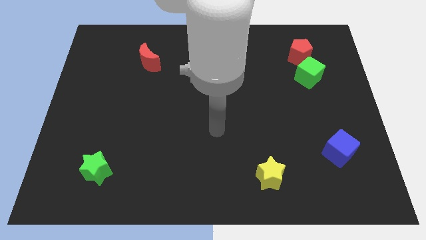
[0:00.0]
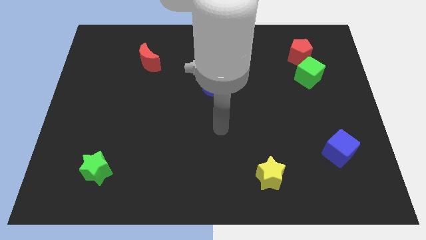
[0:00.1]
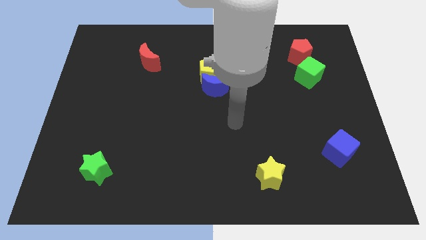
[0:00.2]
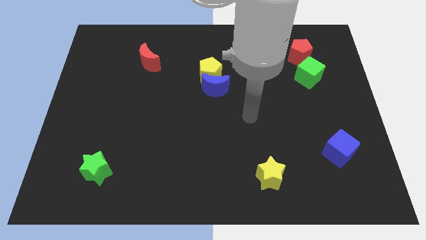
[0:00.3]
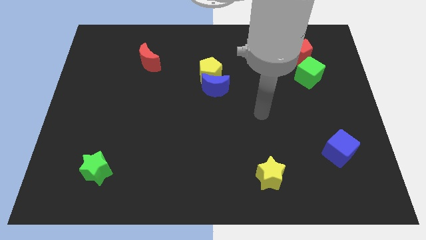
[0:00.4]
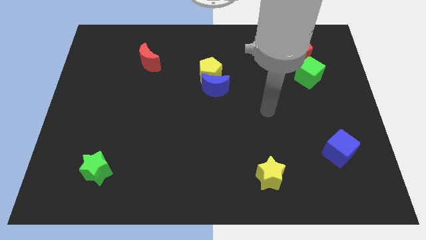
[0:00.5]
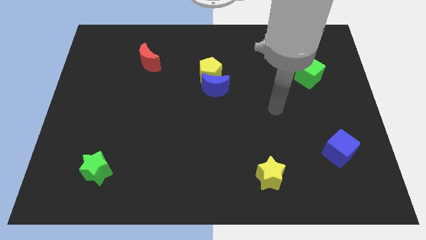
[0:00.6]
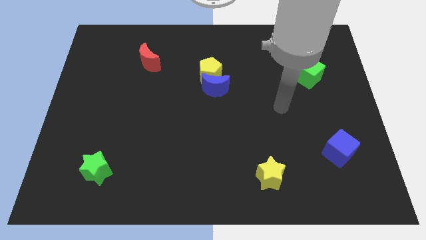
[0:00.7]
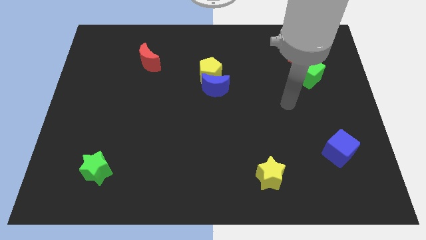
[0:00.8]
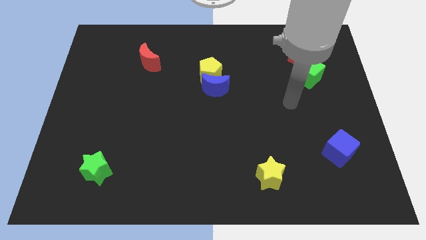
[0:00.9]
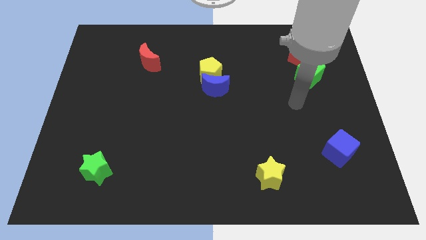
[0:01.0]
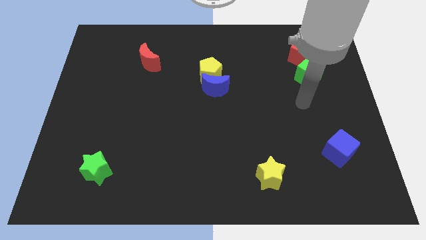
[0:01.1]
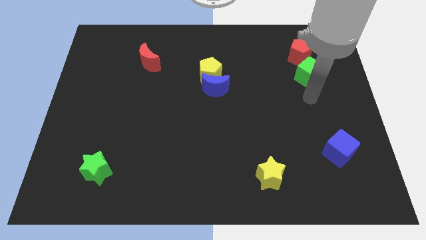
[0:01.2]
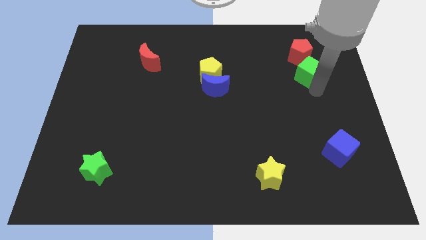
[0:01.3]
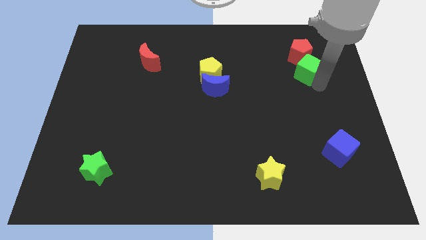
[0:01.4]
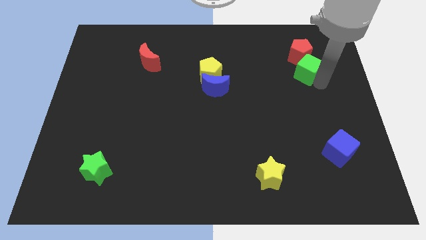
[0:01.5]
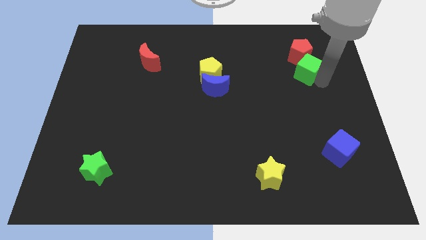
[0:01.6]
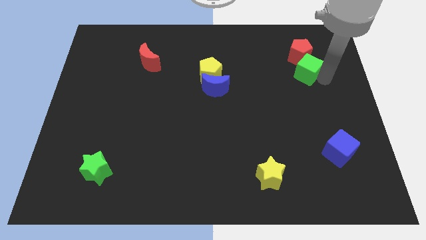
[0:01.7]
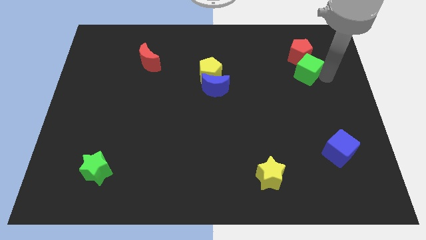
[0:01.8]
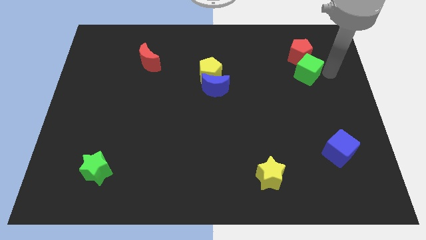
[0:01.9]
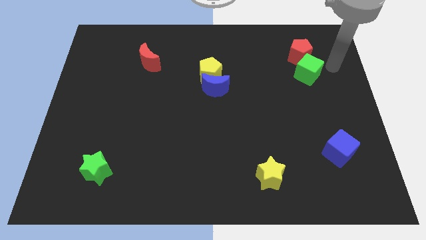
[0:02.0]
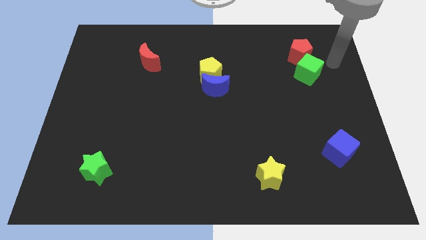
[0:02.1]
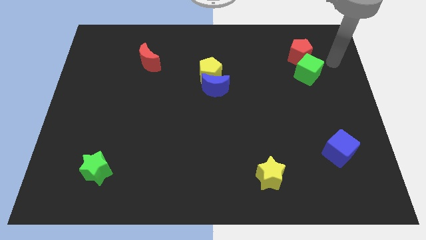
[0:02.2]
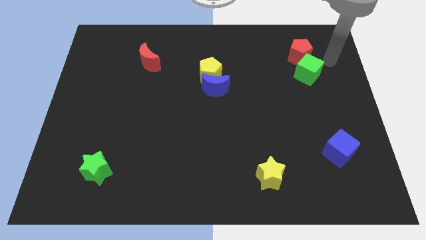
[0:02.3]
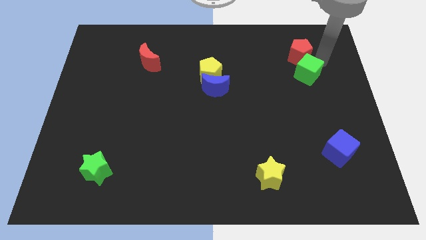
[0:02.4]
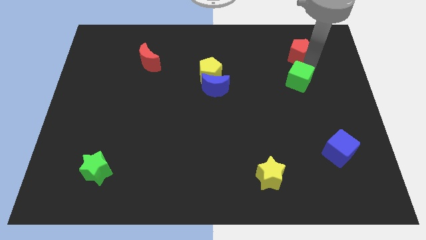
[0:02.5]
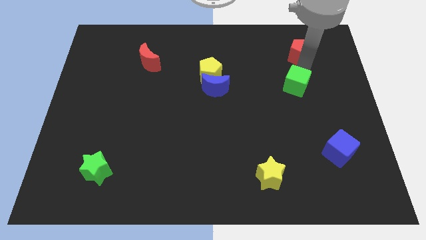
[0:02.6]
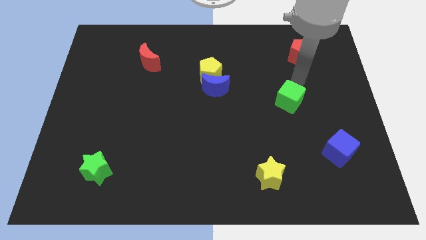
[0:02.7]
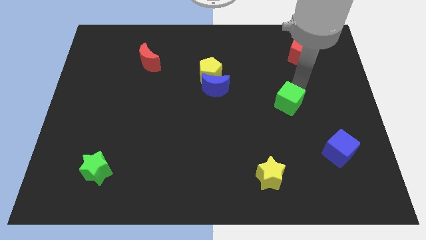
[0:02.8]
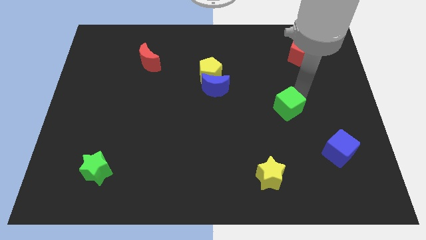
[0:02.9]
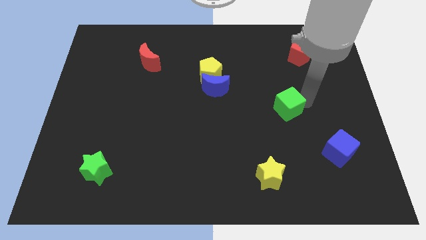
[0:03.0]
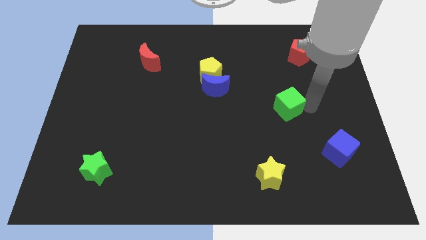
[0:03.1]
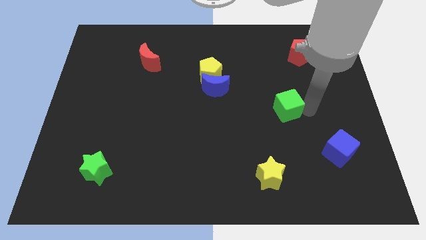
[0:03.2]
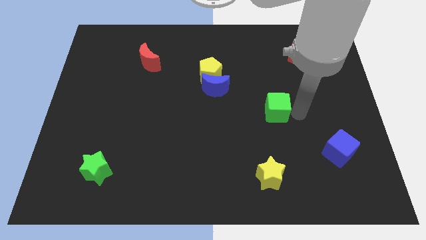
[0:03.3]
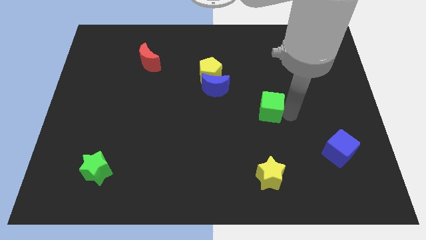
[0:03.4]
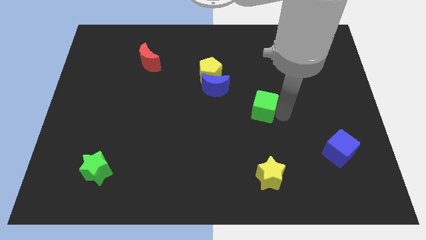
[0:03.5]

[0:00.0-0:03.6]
push the green cube to the vertical top side of the yellow star

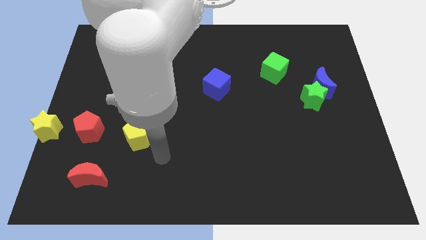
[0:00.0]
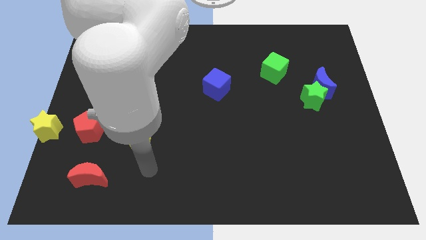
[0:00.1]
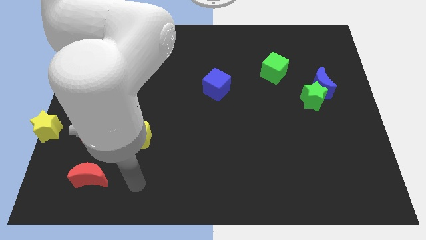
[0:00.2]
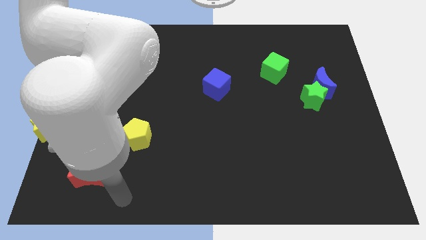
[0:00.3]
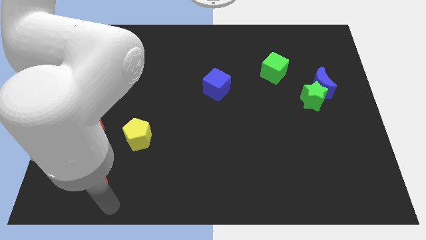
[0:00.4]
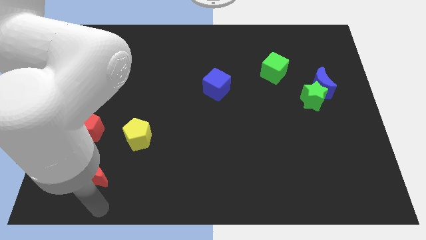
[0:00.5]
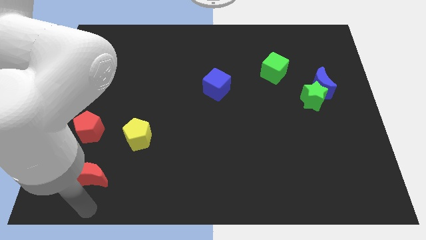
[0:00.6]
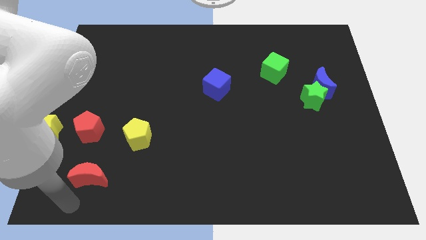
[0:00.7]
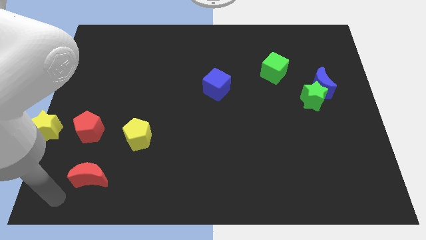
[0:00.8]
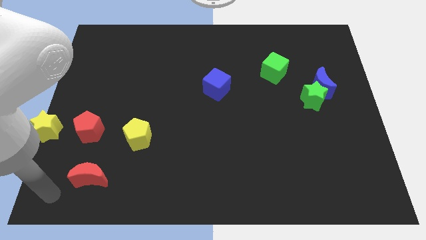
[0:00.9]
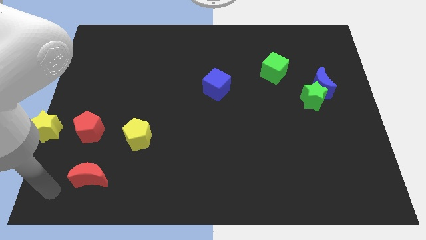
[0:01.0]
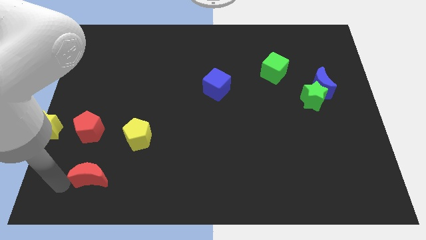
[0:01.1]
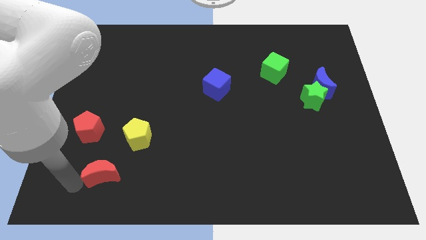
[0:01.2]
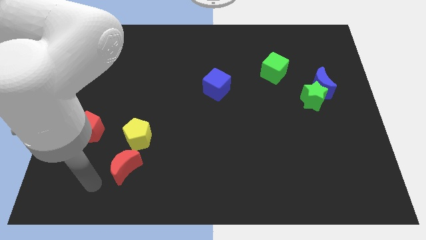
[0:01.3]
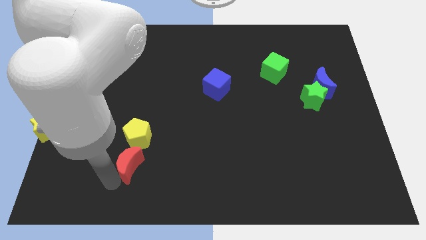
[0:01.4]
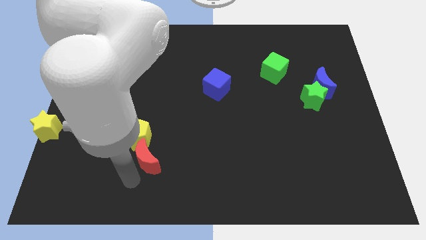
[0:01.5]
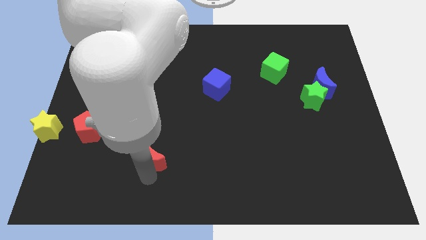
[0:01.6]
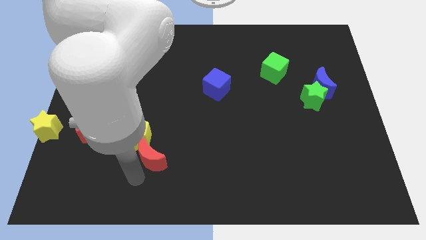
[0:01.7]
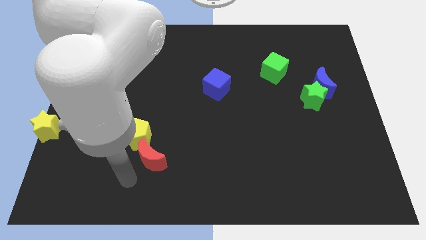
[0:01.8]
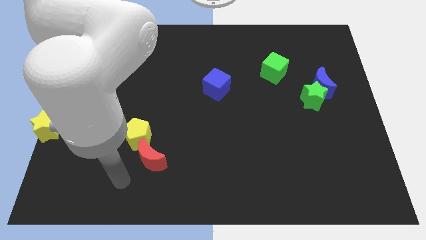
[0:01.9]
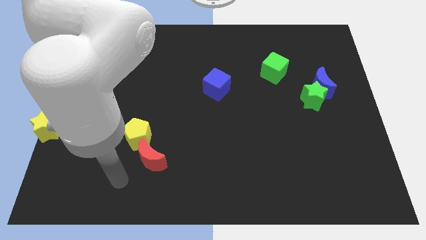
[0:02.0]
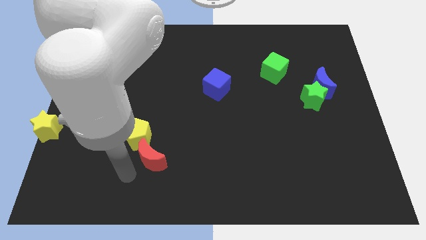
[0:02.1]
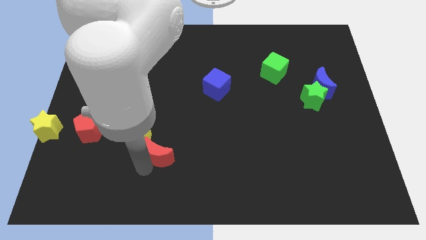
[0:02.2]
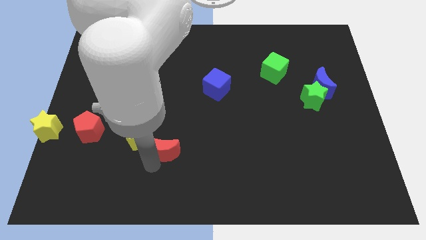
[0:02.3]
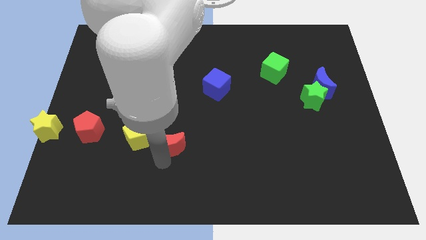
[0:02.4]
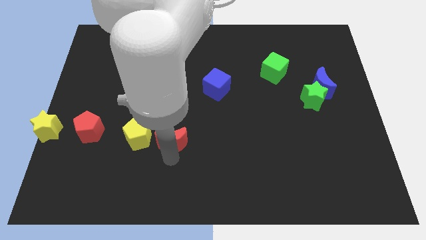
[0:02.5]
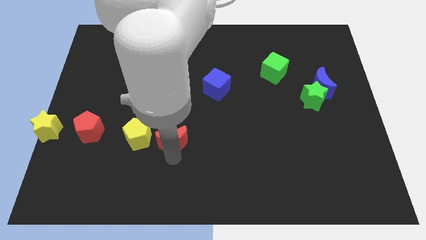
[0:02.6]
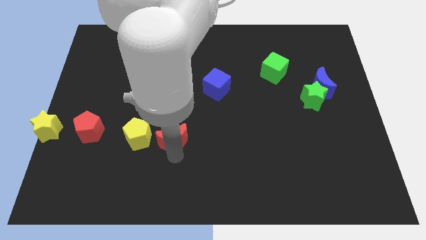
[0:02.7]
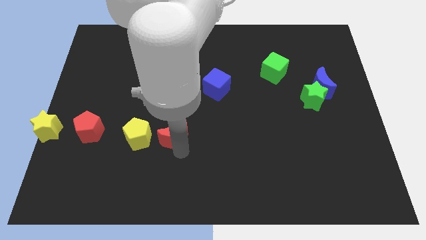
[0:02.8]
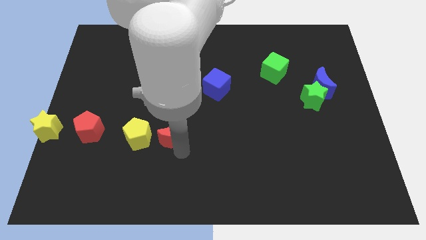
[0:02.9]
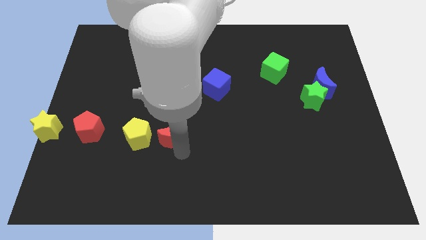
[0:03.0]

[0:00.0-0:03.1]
push the red moon to the right side of the yellow pentagon

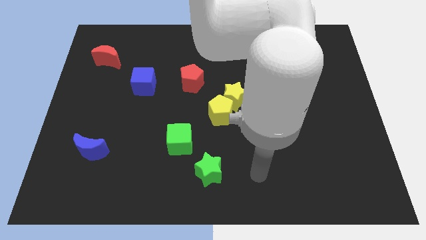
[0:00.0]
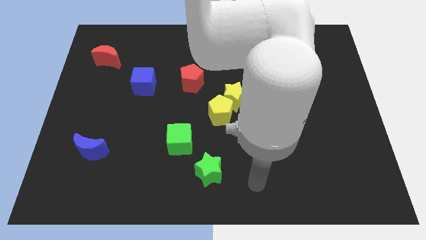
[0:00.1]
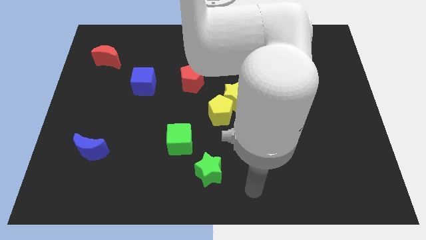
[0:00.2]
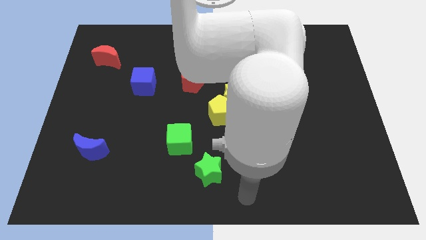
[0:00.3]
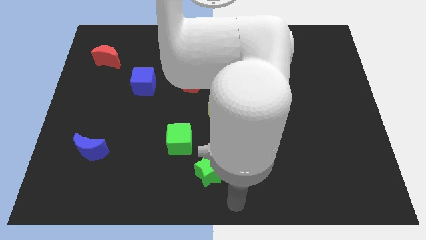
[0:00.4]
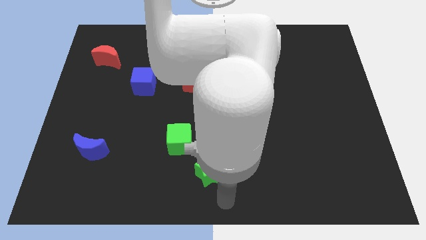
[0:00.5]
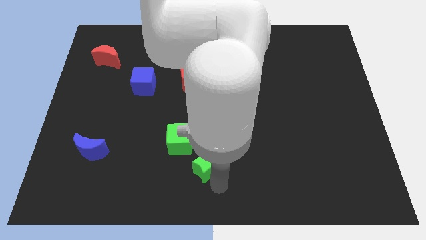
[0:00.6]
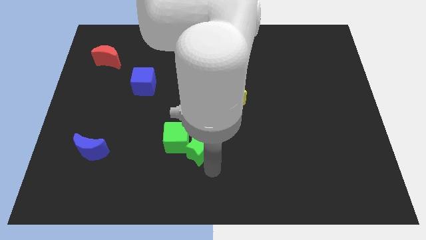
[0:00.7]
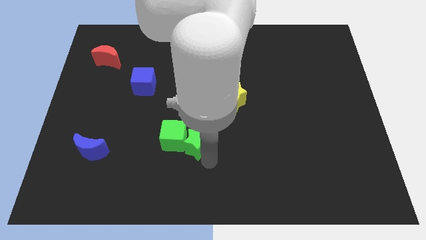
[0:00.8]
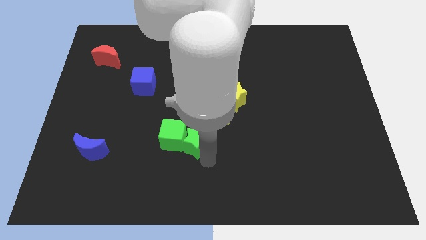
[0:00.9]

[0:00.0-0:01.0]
push green star into the green cube

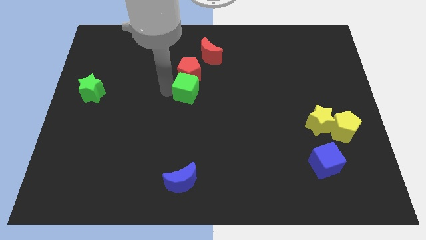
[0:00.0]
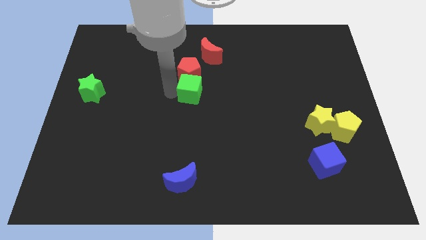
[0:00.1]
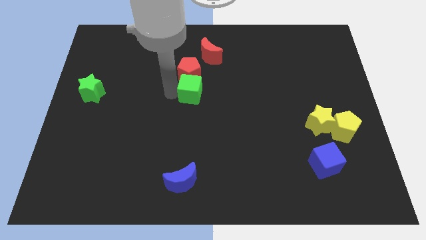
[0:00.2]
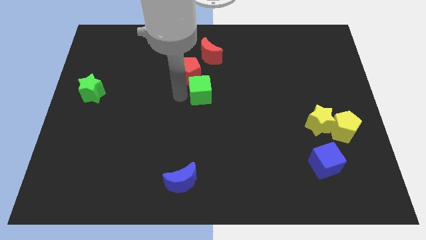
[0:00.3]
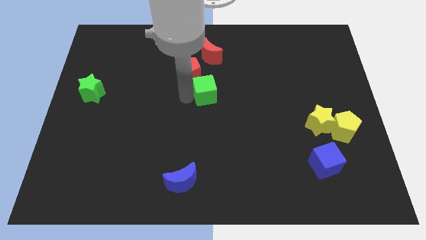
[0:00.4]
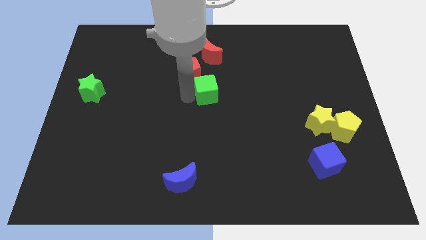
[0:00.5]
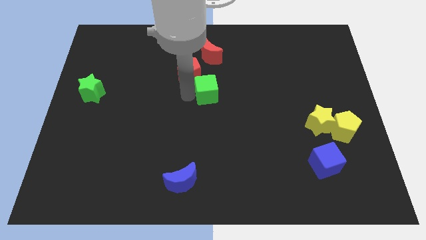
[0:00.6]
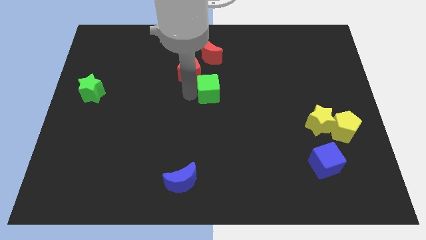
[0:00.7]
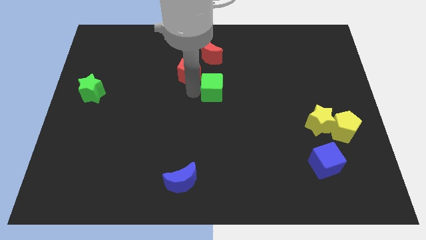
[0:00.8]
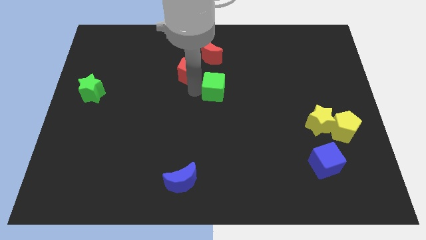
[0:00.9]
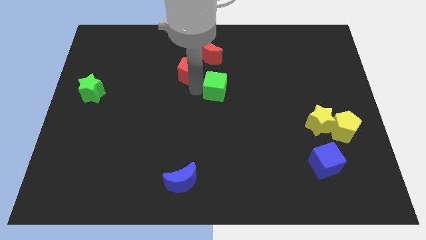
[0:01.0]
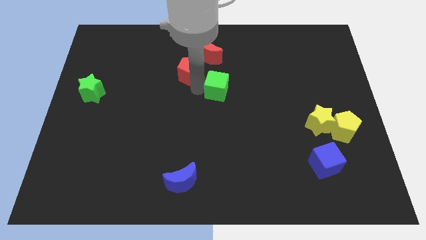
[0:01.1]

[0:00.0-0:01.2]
place green cube to the bottom of red moon

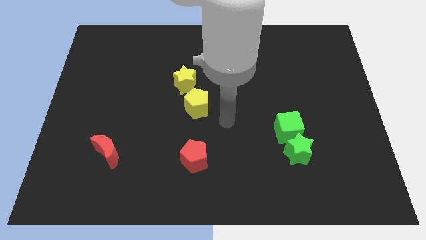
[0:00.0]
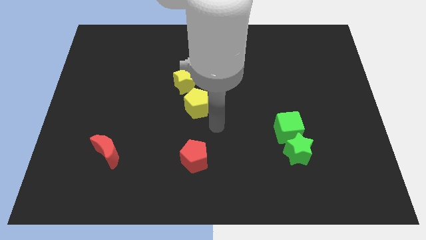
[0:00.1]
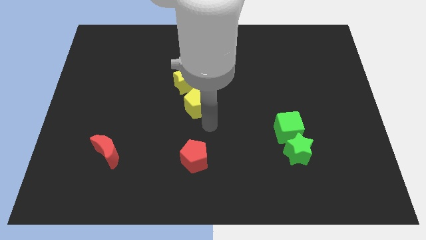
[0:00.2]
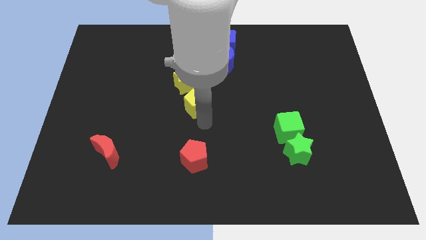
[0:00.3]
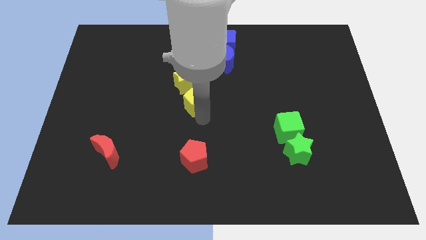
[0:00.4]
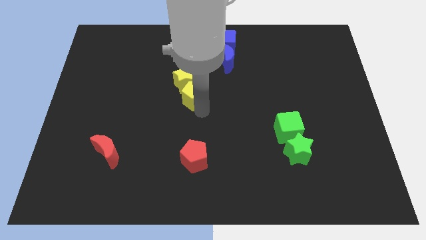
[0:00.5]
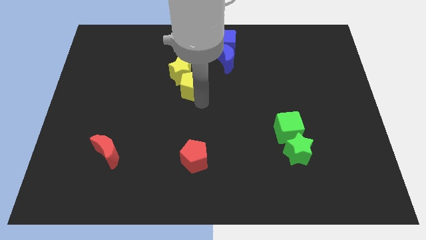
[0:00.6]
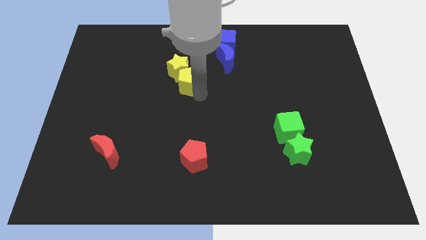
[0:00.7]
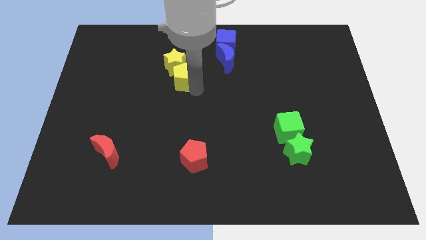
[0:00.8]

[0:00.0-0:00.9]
slide the yellow blocks up slightly
